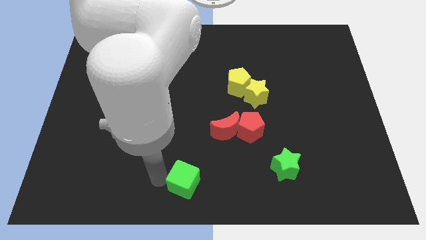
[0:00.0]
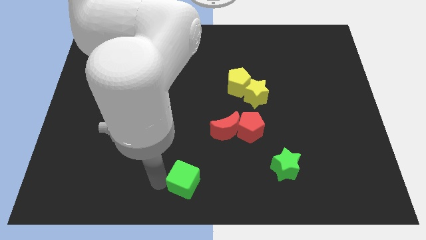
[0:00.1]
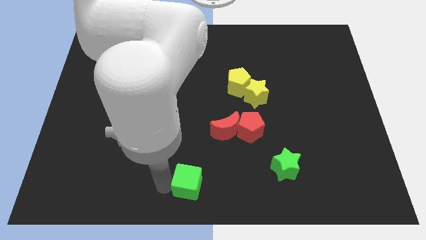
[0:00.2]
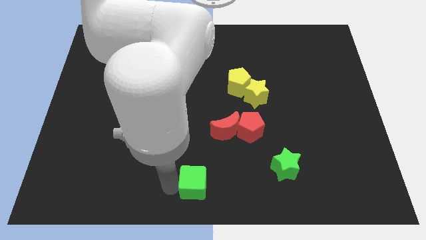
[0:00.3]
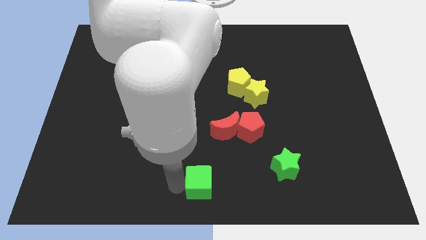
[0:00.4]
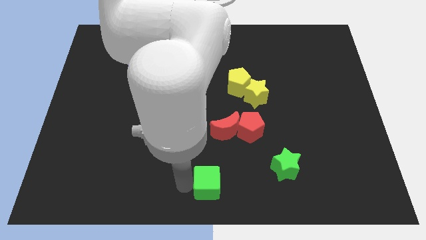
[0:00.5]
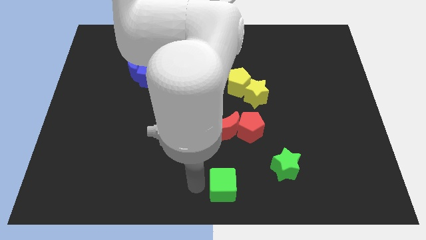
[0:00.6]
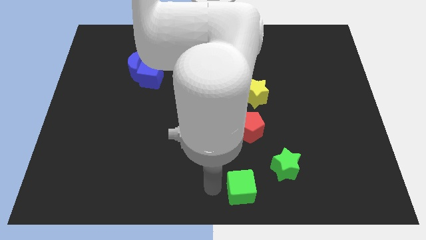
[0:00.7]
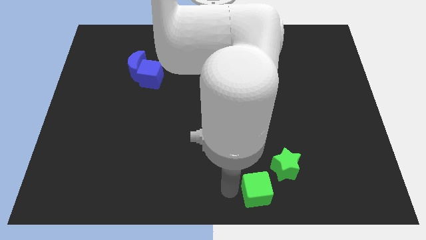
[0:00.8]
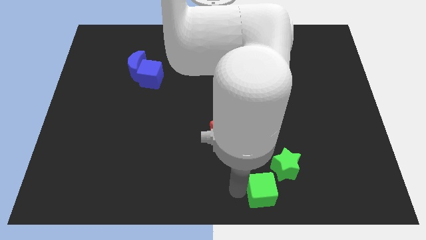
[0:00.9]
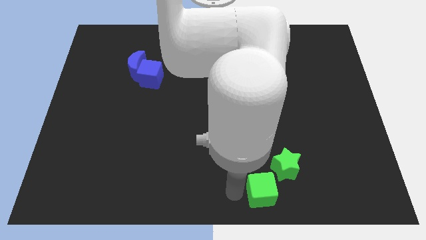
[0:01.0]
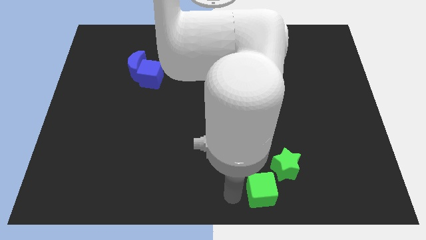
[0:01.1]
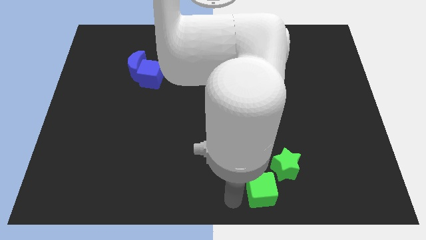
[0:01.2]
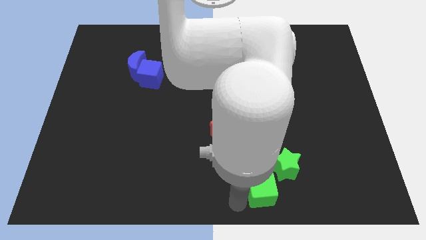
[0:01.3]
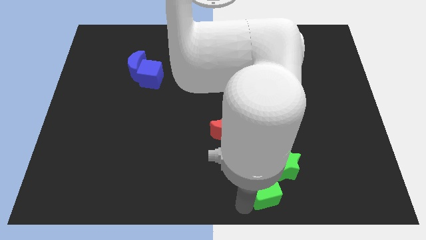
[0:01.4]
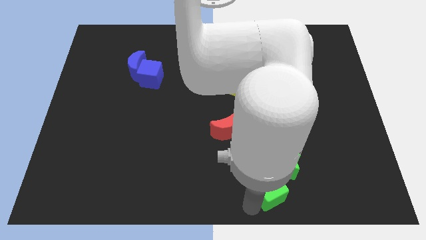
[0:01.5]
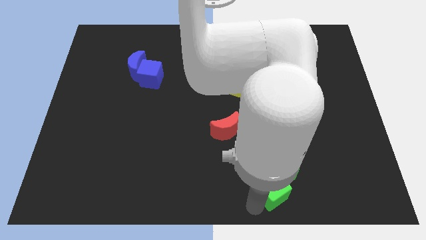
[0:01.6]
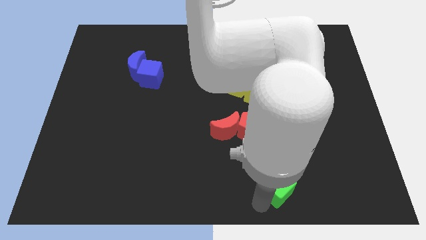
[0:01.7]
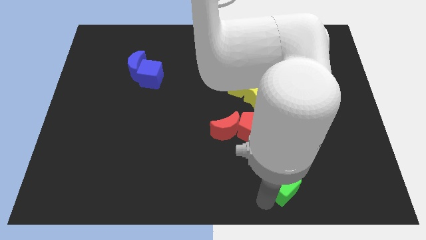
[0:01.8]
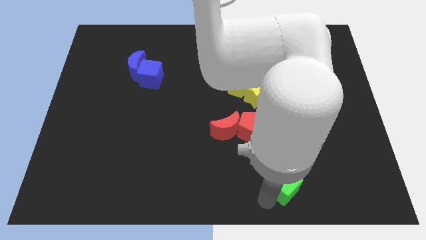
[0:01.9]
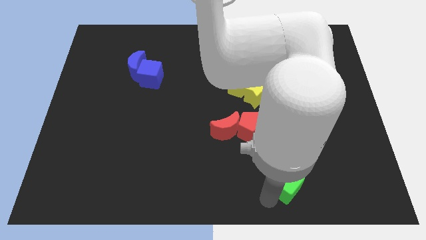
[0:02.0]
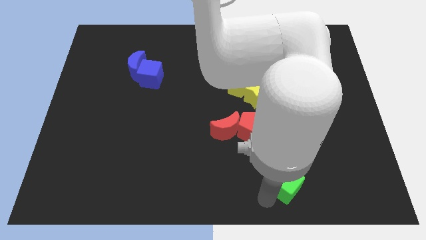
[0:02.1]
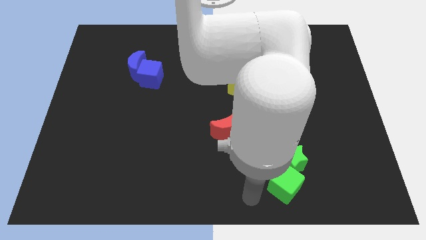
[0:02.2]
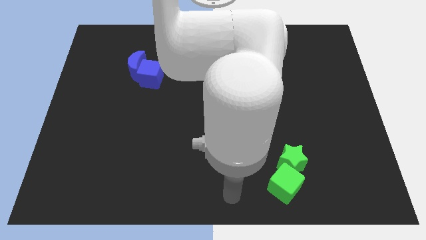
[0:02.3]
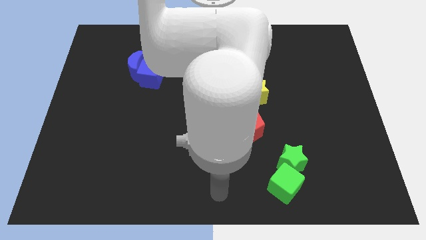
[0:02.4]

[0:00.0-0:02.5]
move the green cube below the green star

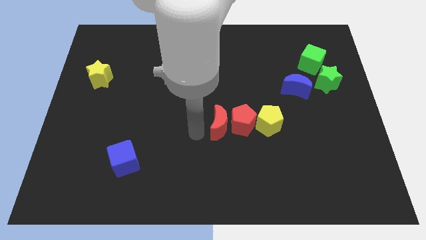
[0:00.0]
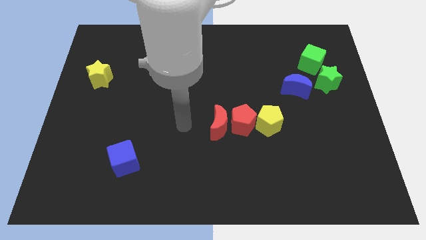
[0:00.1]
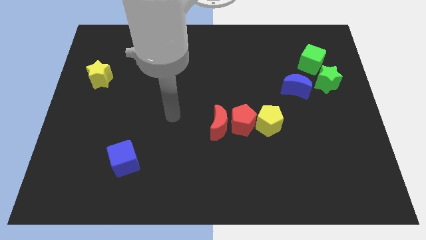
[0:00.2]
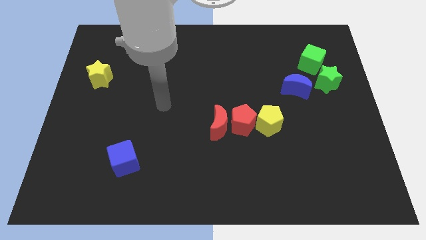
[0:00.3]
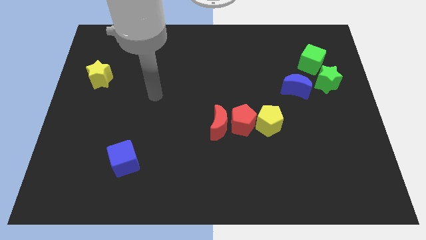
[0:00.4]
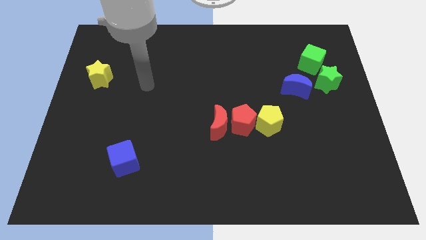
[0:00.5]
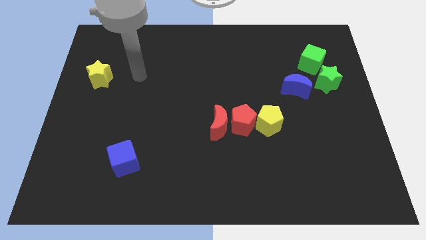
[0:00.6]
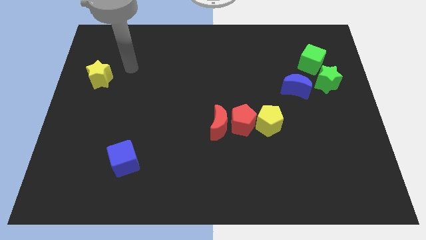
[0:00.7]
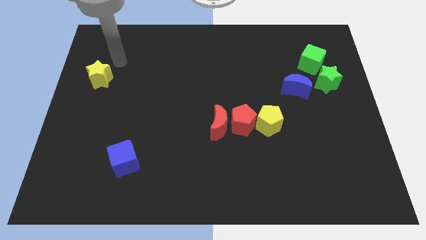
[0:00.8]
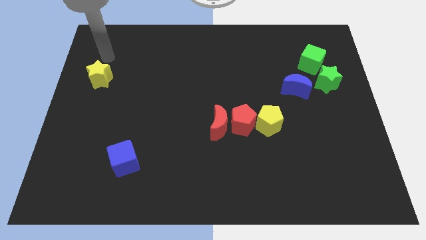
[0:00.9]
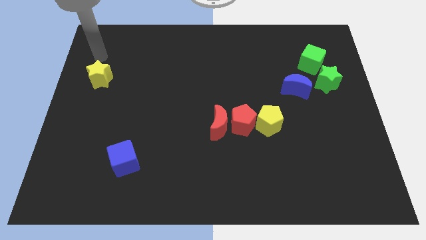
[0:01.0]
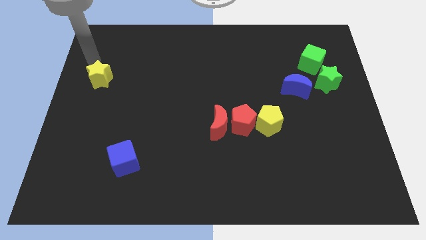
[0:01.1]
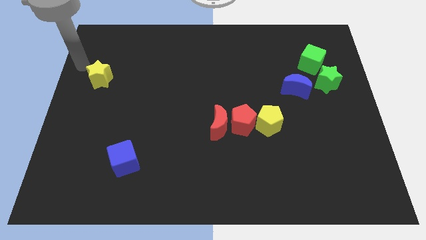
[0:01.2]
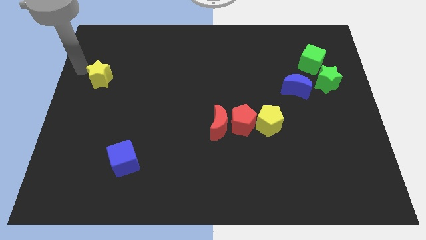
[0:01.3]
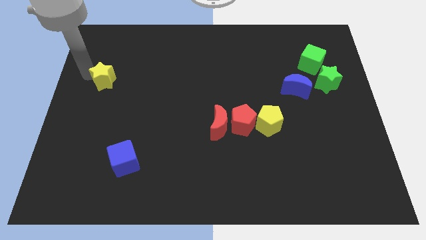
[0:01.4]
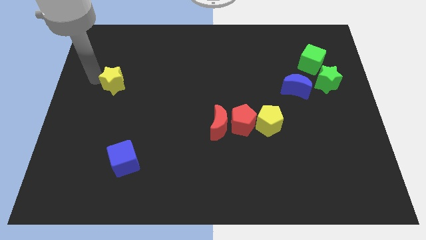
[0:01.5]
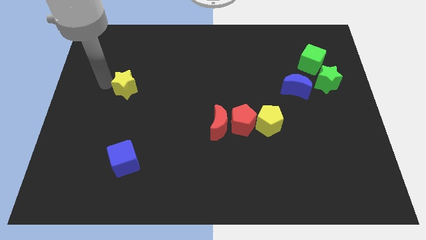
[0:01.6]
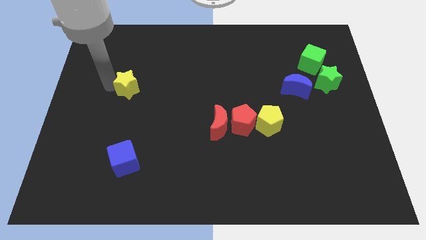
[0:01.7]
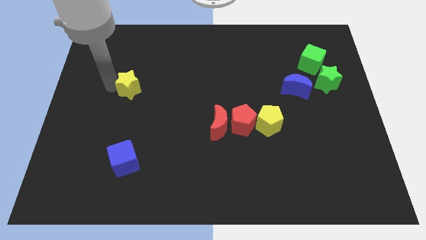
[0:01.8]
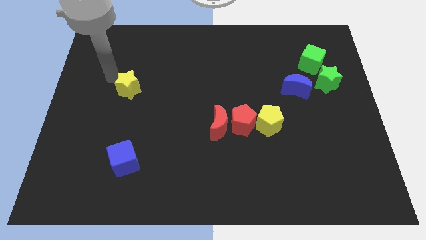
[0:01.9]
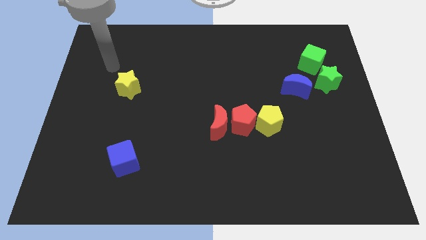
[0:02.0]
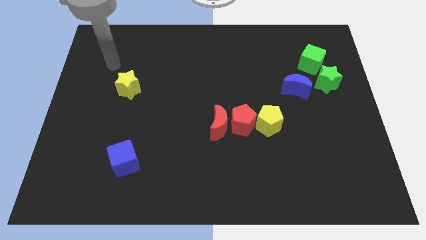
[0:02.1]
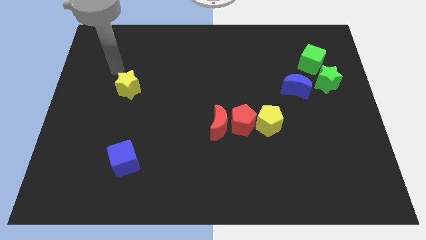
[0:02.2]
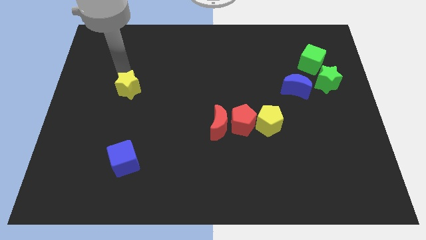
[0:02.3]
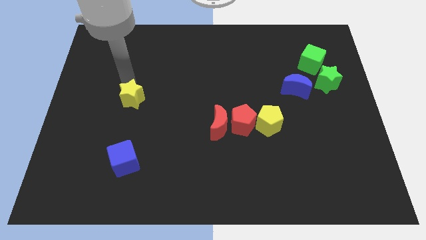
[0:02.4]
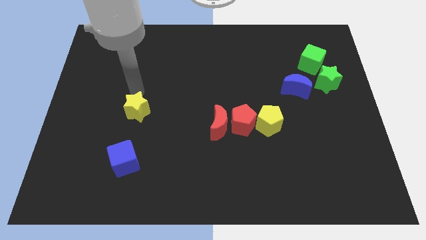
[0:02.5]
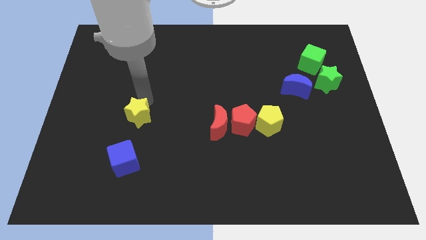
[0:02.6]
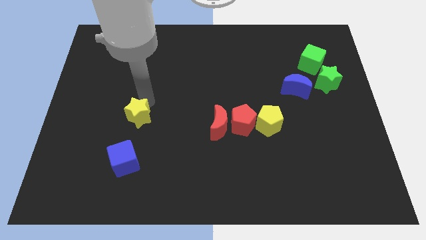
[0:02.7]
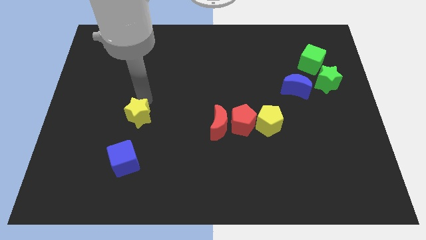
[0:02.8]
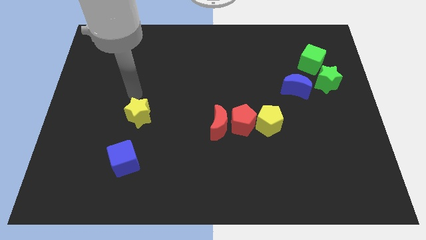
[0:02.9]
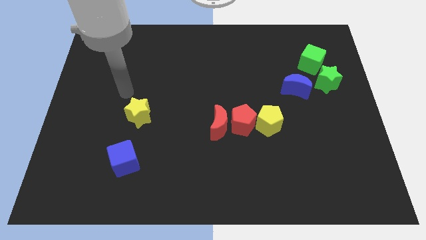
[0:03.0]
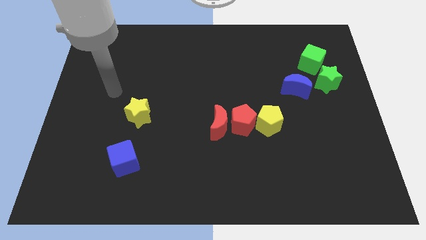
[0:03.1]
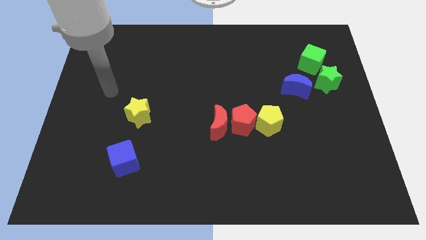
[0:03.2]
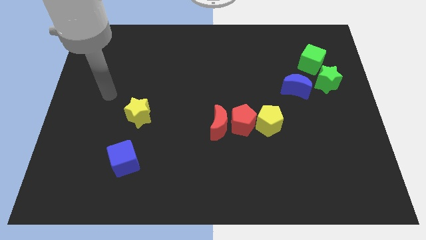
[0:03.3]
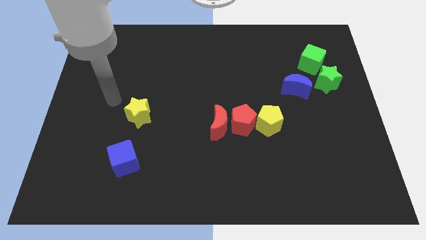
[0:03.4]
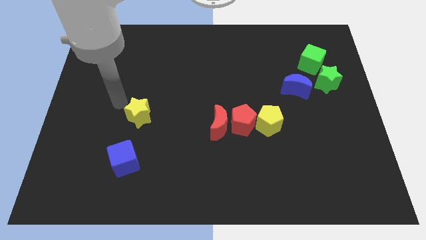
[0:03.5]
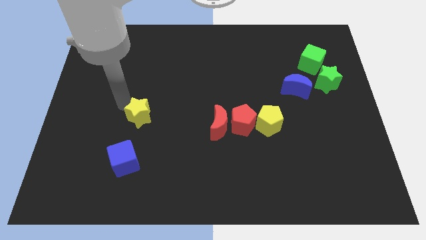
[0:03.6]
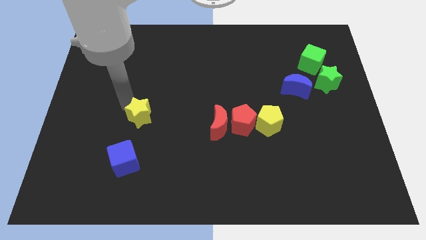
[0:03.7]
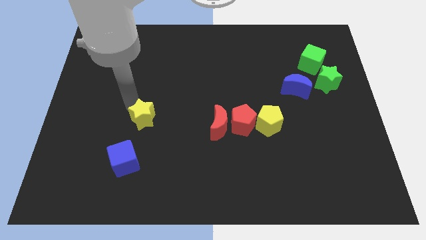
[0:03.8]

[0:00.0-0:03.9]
move the yellow star diagonally on the top right side of the blue cube

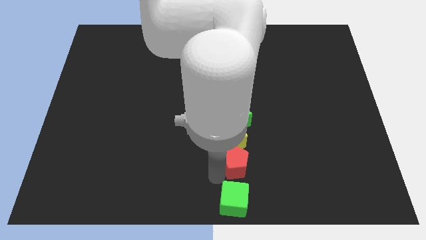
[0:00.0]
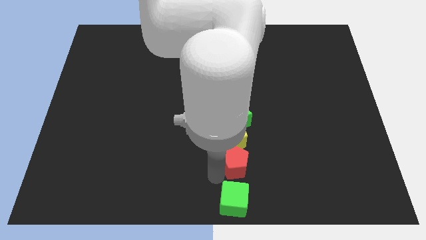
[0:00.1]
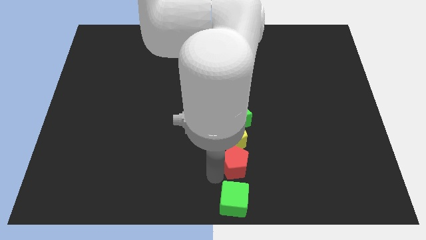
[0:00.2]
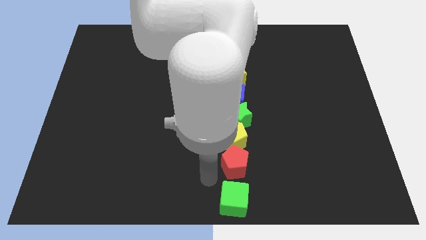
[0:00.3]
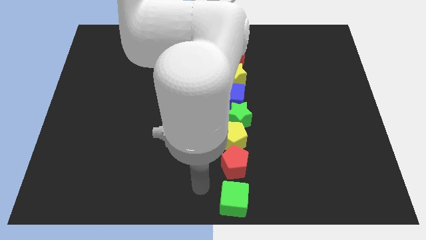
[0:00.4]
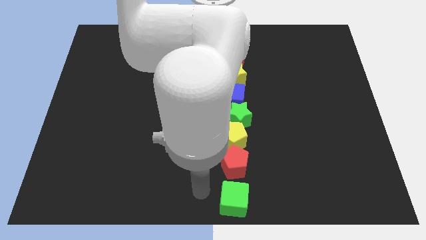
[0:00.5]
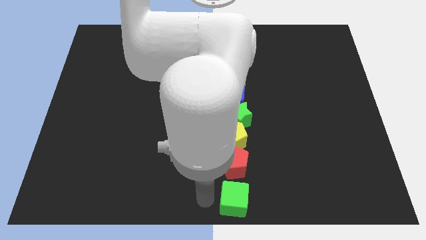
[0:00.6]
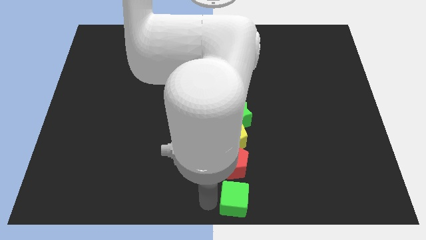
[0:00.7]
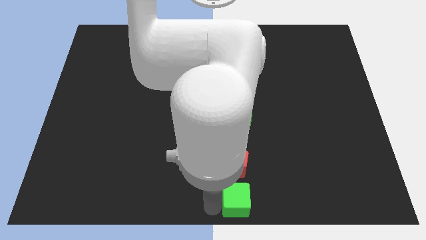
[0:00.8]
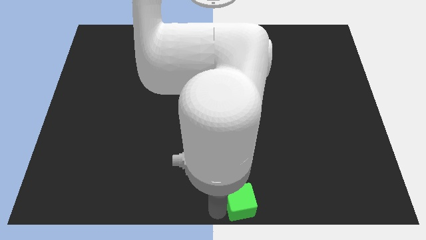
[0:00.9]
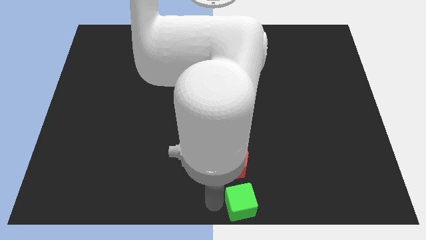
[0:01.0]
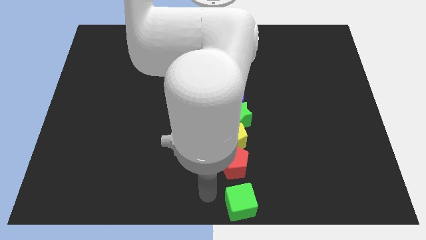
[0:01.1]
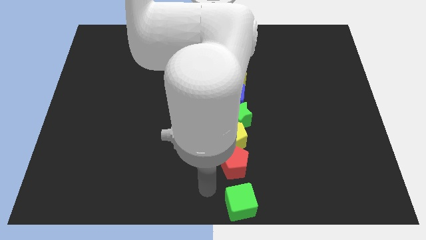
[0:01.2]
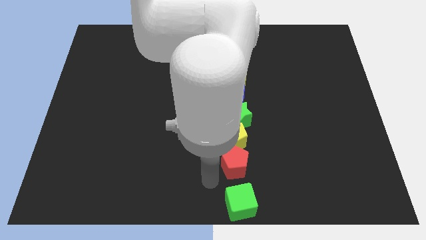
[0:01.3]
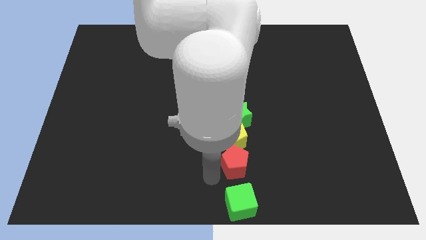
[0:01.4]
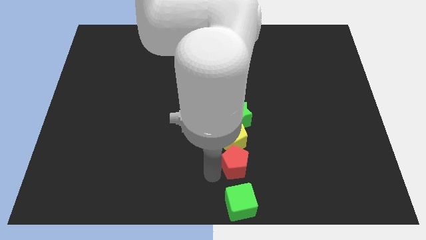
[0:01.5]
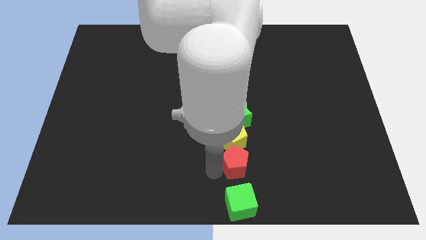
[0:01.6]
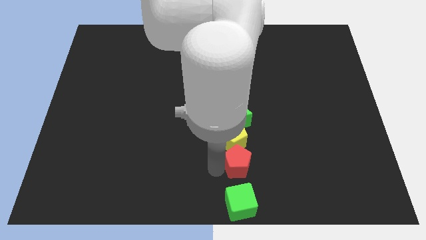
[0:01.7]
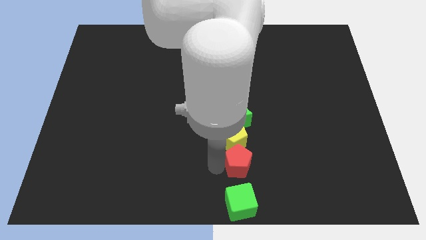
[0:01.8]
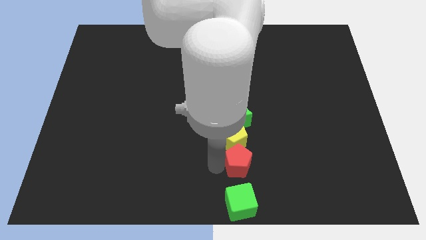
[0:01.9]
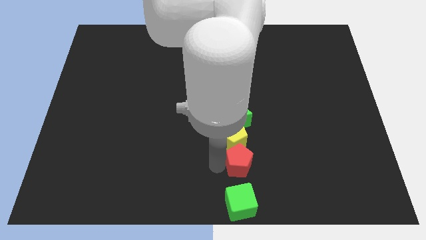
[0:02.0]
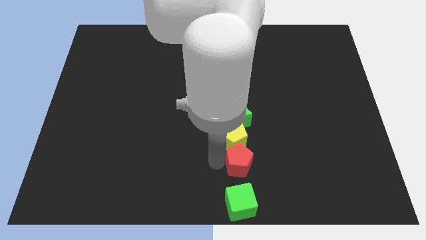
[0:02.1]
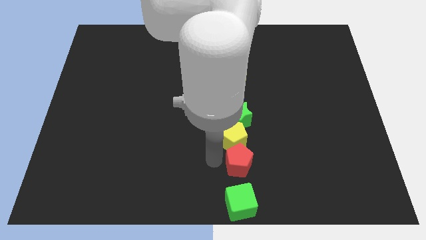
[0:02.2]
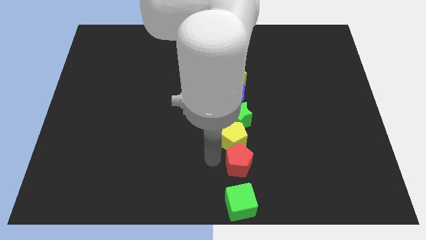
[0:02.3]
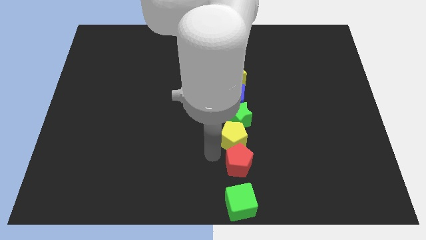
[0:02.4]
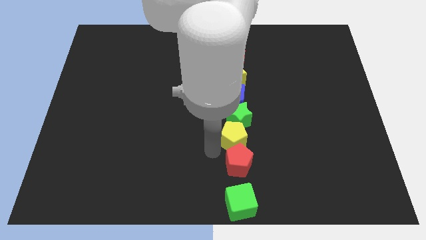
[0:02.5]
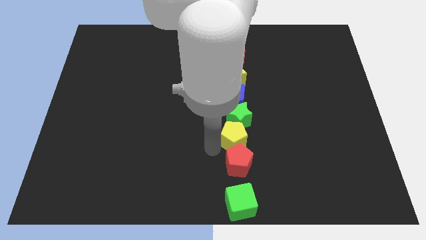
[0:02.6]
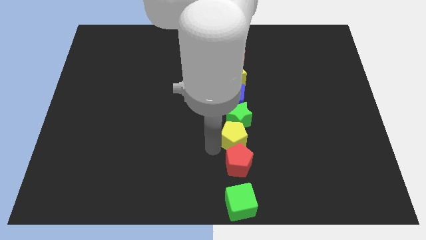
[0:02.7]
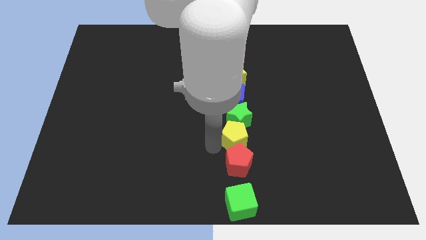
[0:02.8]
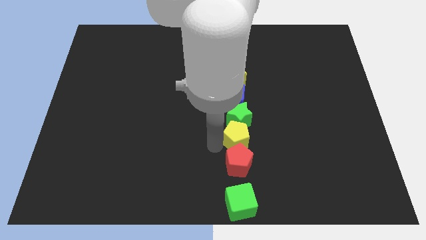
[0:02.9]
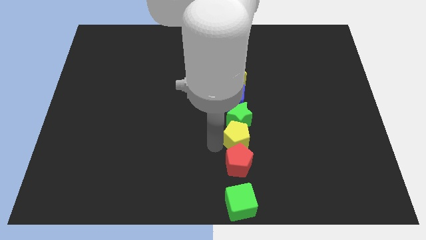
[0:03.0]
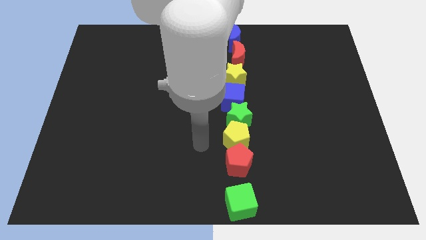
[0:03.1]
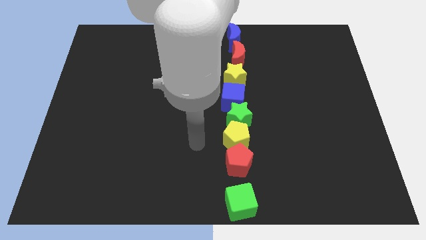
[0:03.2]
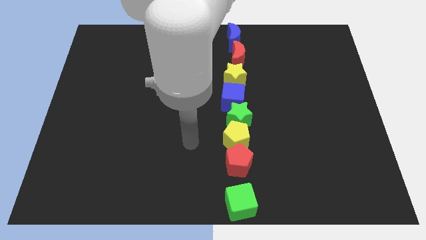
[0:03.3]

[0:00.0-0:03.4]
slightly push the green cube towards right side
